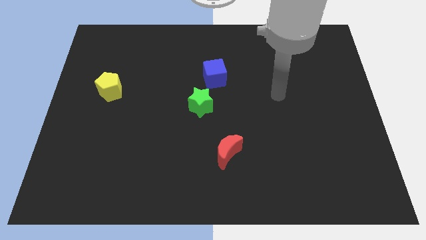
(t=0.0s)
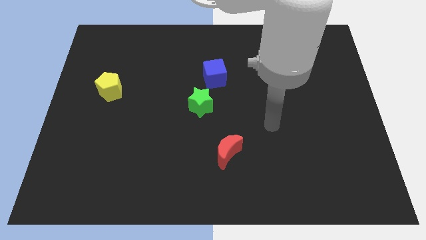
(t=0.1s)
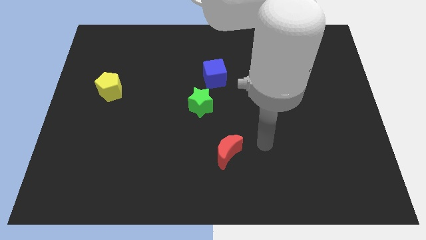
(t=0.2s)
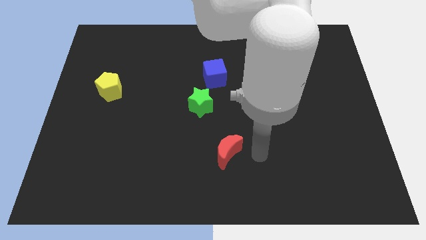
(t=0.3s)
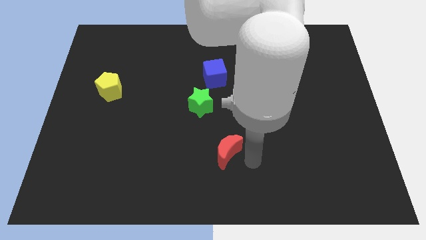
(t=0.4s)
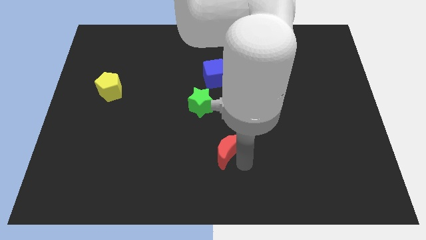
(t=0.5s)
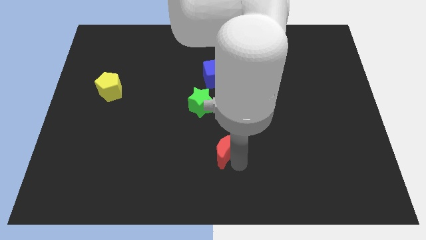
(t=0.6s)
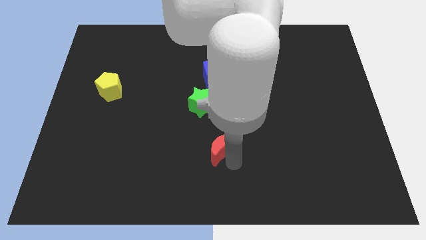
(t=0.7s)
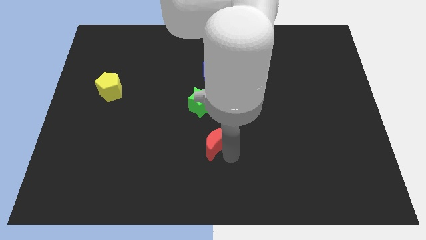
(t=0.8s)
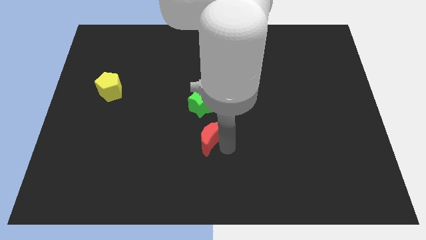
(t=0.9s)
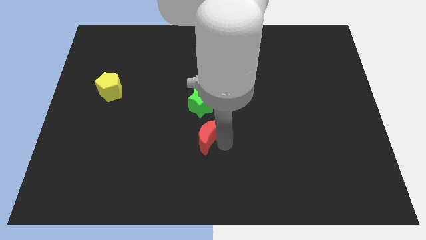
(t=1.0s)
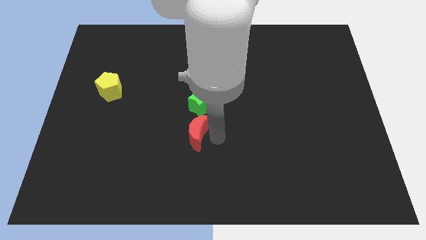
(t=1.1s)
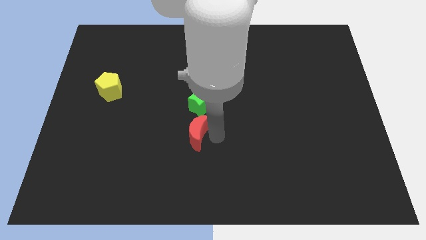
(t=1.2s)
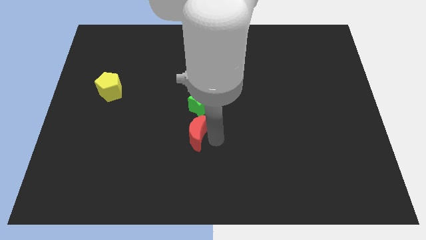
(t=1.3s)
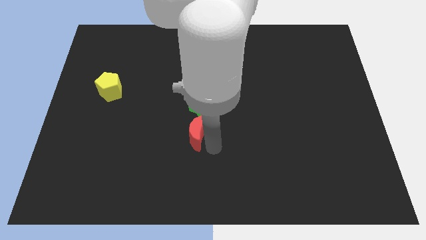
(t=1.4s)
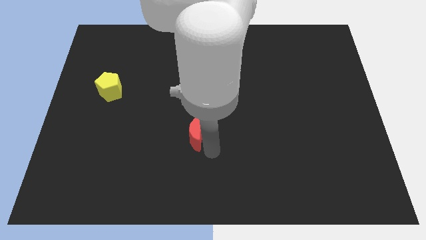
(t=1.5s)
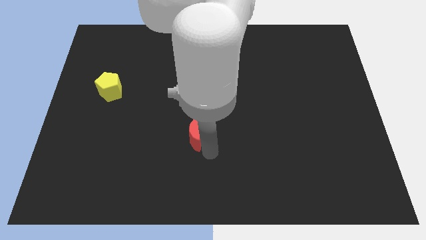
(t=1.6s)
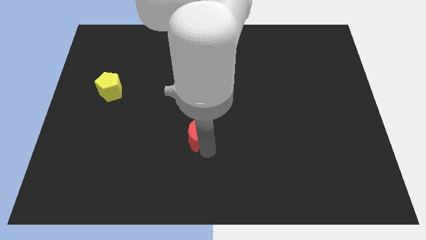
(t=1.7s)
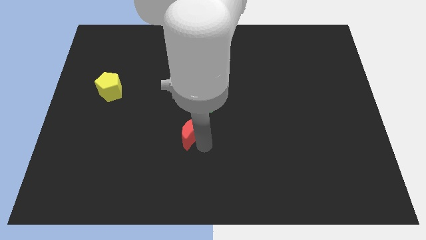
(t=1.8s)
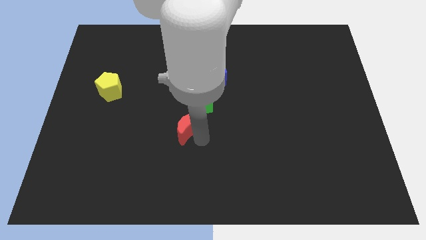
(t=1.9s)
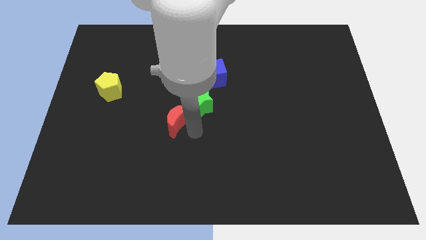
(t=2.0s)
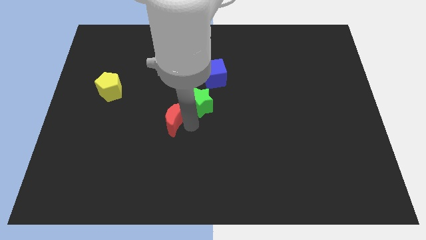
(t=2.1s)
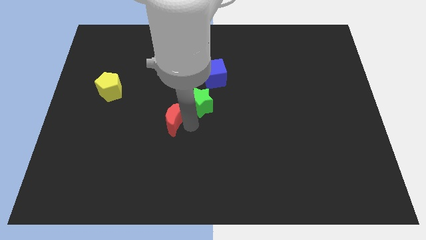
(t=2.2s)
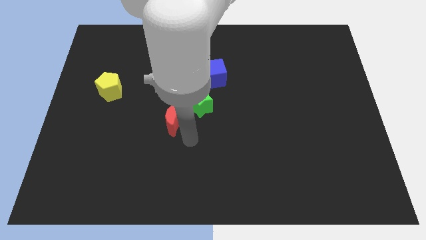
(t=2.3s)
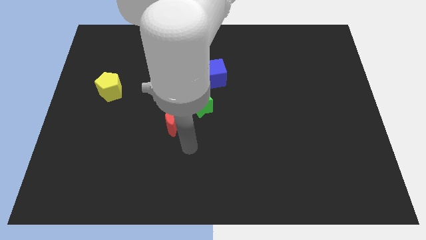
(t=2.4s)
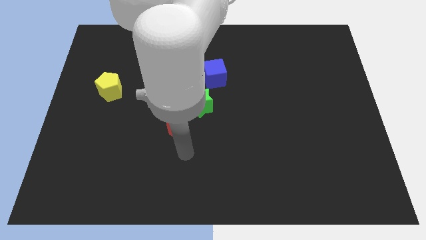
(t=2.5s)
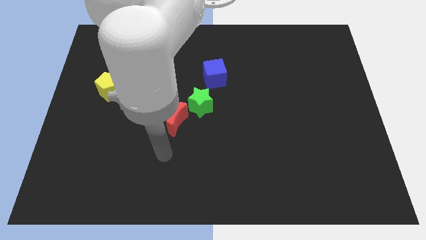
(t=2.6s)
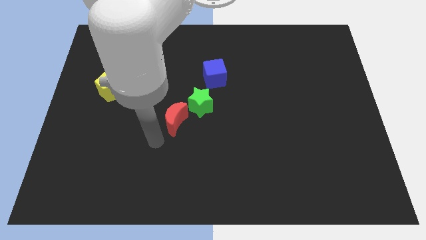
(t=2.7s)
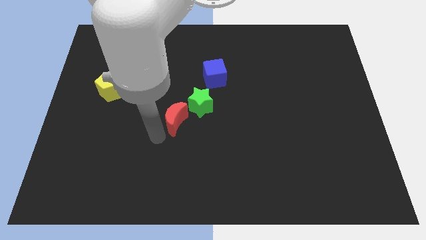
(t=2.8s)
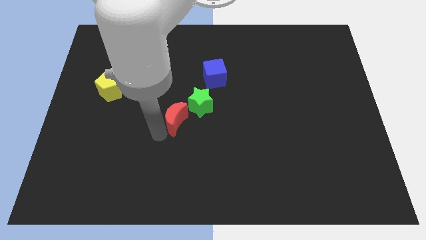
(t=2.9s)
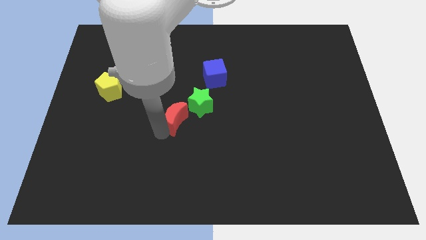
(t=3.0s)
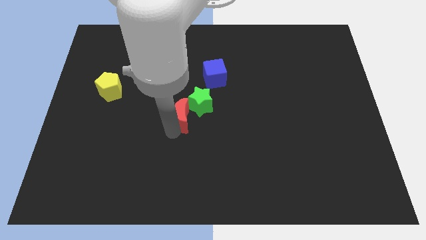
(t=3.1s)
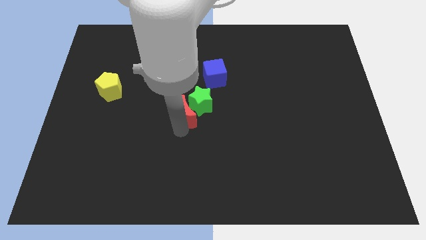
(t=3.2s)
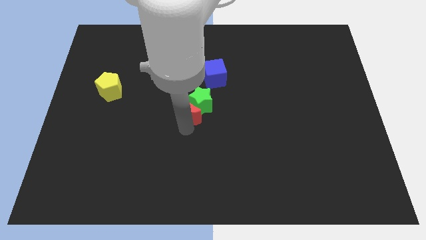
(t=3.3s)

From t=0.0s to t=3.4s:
slide the red block to the star

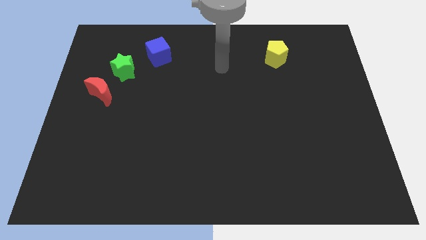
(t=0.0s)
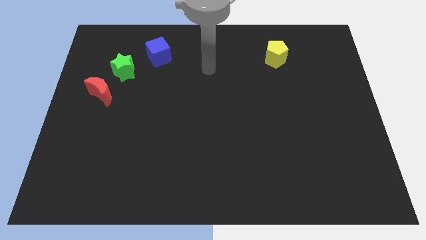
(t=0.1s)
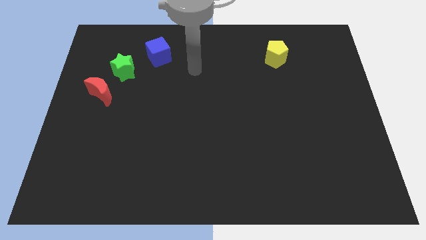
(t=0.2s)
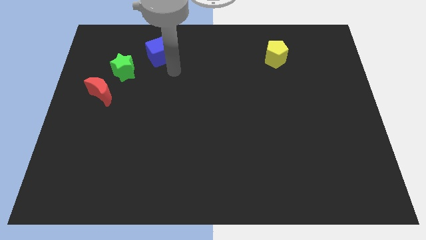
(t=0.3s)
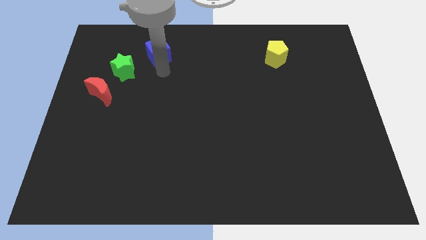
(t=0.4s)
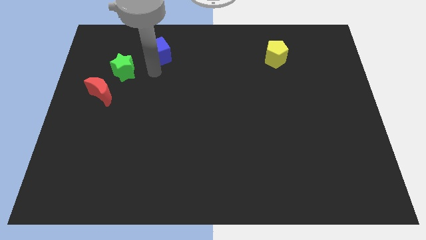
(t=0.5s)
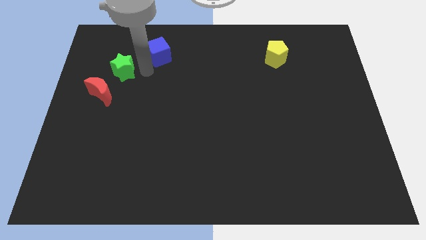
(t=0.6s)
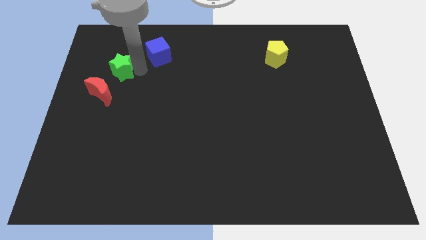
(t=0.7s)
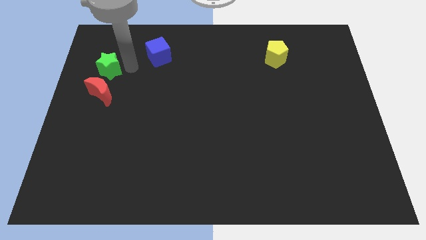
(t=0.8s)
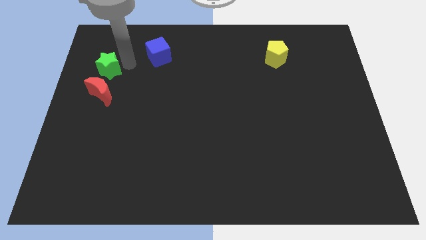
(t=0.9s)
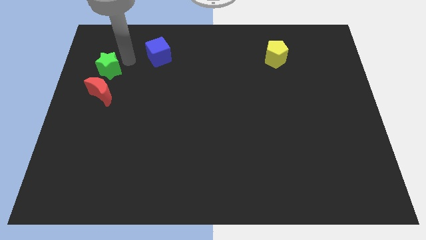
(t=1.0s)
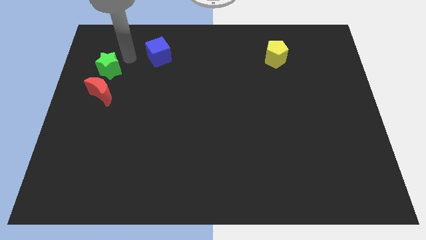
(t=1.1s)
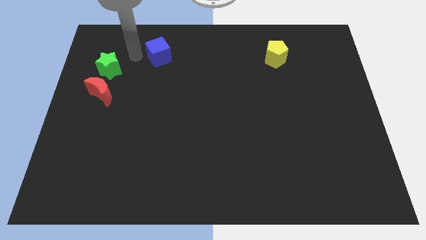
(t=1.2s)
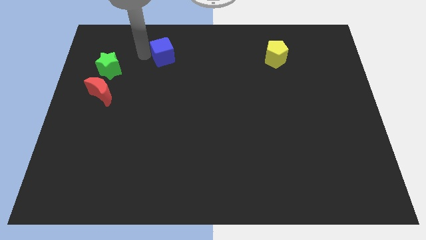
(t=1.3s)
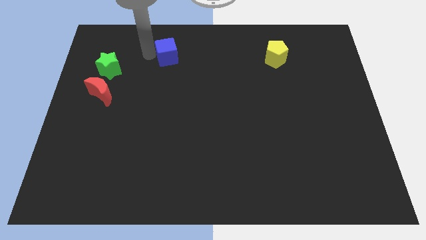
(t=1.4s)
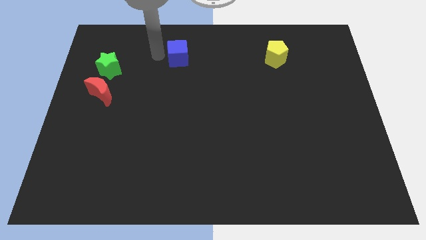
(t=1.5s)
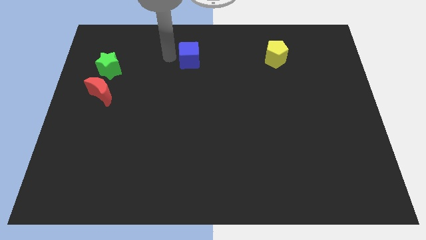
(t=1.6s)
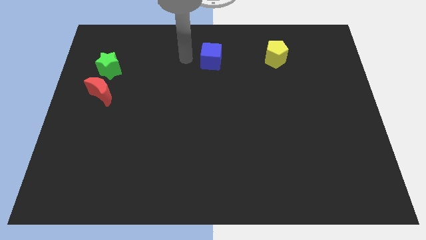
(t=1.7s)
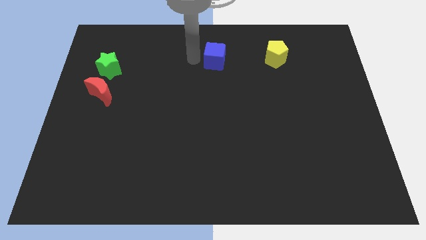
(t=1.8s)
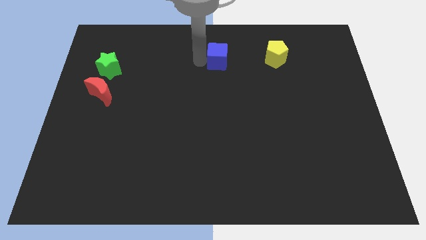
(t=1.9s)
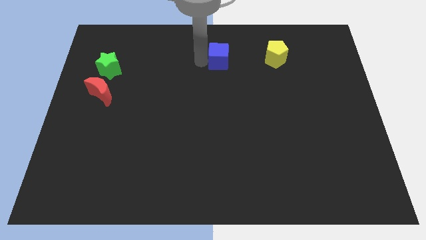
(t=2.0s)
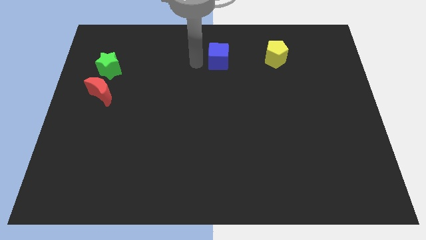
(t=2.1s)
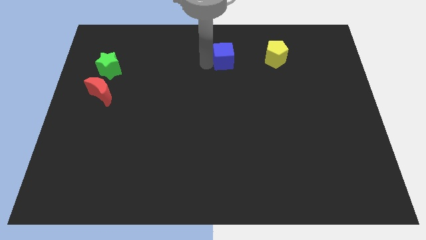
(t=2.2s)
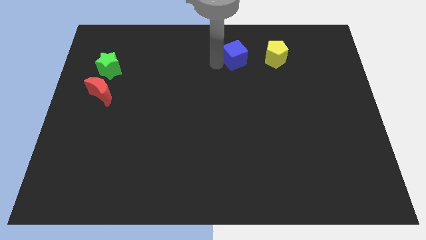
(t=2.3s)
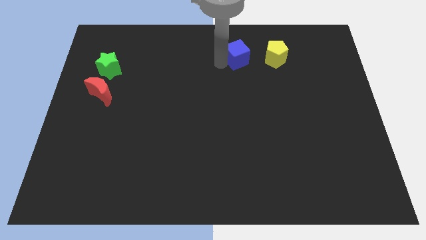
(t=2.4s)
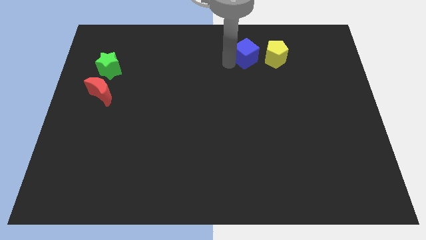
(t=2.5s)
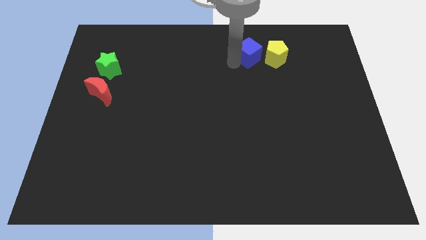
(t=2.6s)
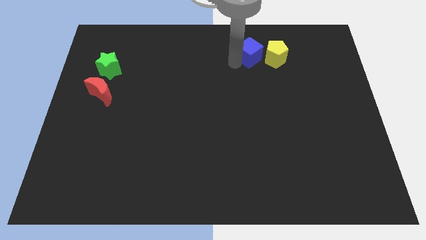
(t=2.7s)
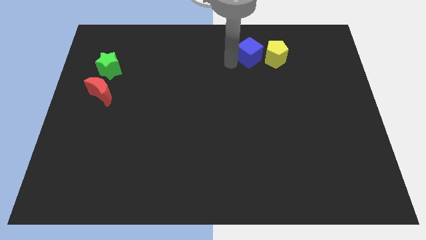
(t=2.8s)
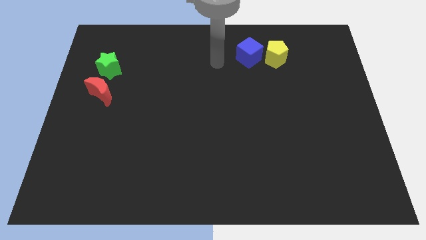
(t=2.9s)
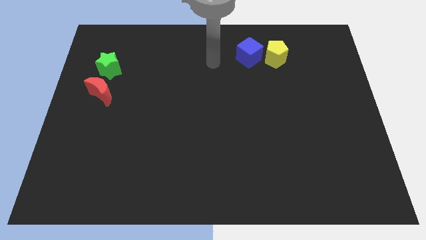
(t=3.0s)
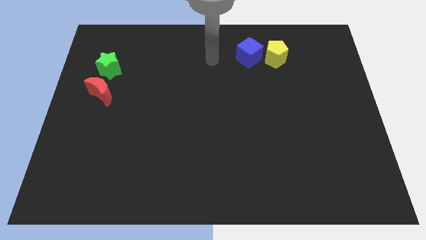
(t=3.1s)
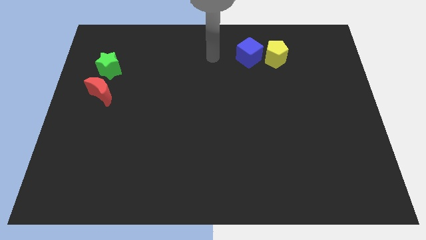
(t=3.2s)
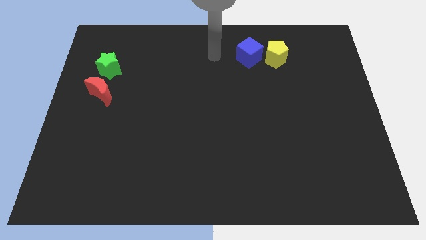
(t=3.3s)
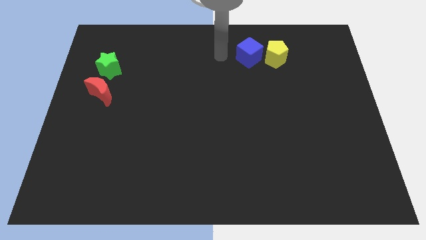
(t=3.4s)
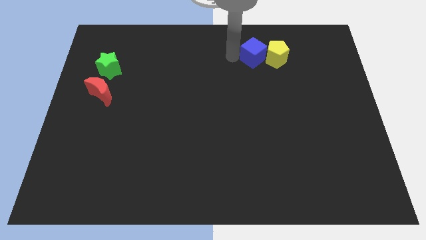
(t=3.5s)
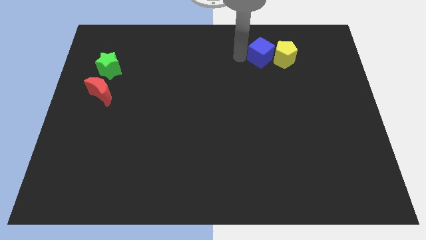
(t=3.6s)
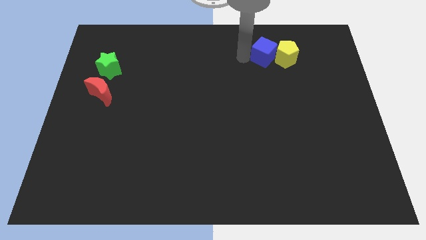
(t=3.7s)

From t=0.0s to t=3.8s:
push the blue cube to the pentagon

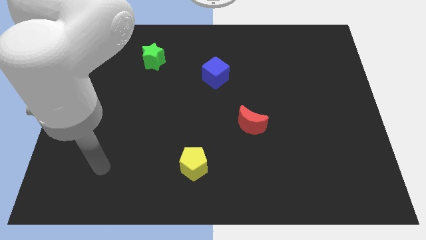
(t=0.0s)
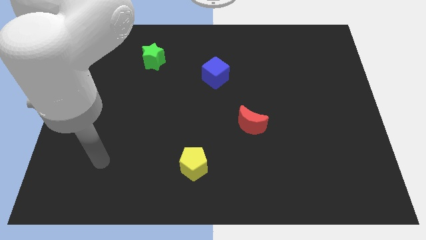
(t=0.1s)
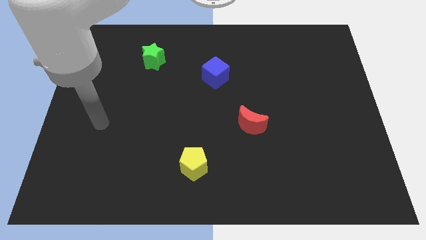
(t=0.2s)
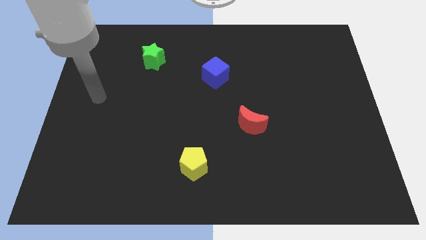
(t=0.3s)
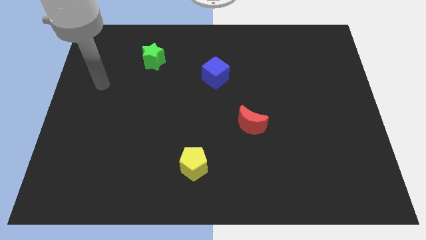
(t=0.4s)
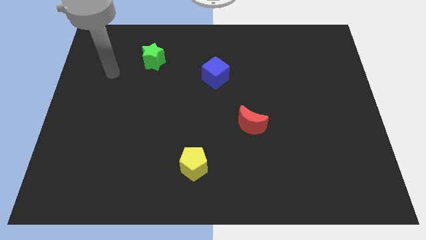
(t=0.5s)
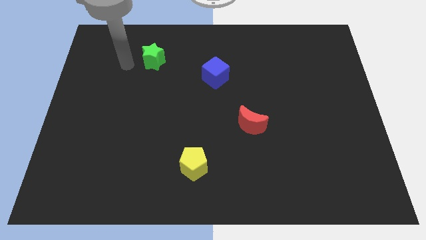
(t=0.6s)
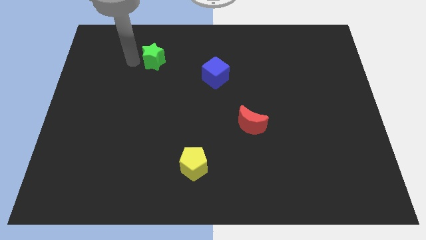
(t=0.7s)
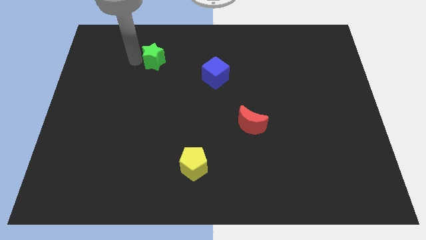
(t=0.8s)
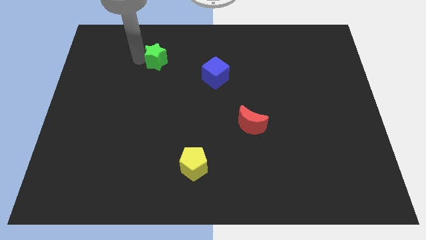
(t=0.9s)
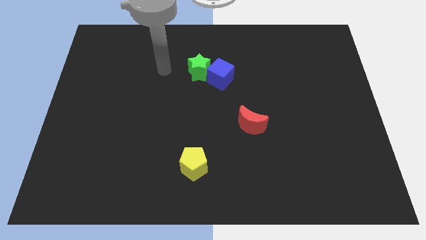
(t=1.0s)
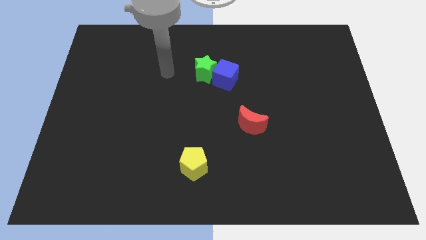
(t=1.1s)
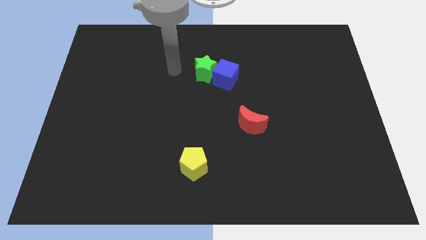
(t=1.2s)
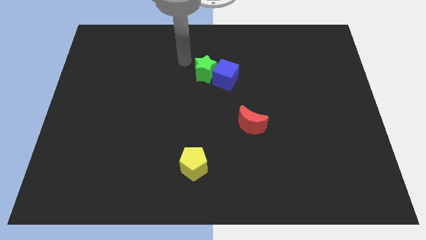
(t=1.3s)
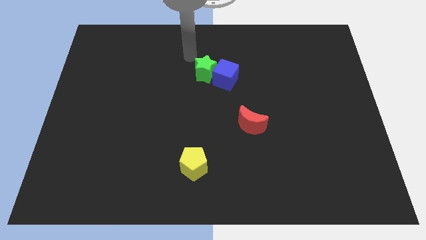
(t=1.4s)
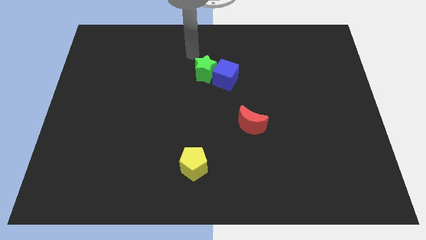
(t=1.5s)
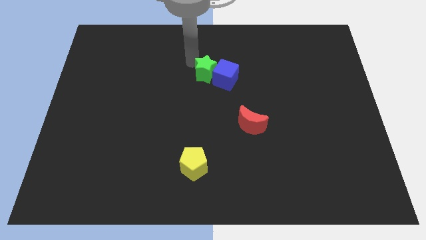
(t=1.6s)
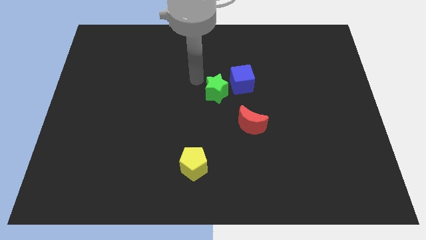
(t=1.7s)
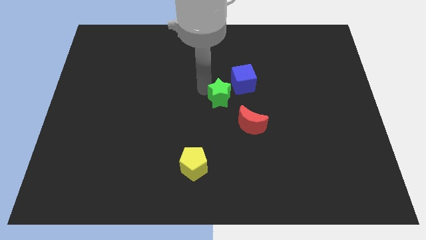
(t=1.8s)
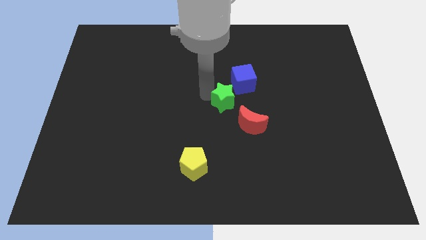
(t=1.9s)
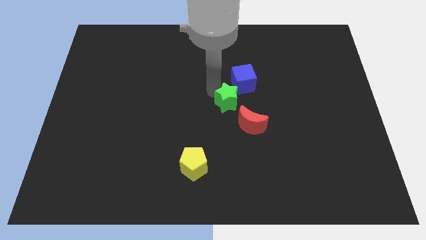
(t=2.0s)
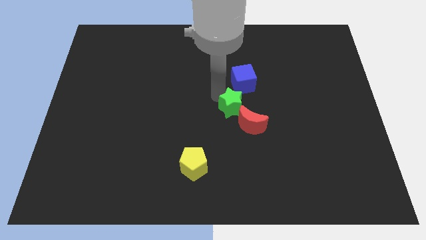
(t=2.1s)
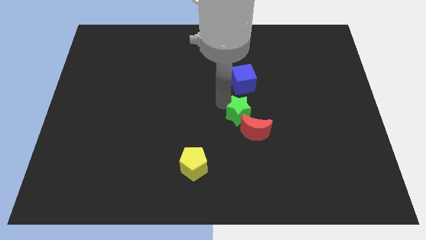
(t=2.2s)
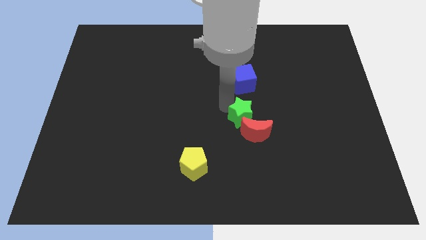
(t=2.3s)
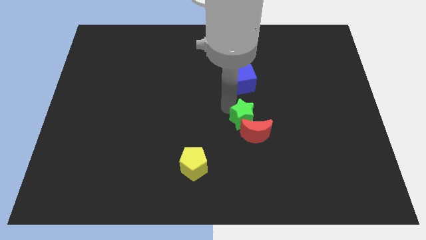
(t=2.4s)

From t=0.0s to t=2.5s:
slide the green star next to the moon
